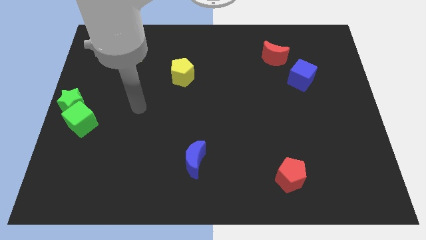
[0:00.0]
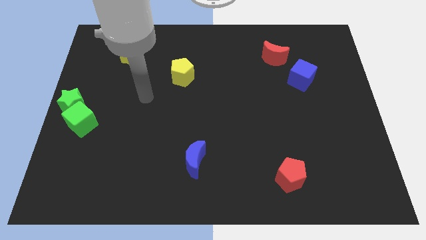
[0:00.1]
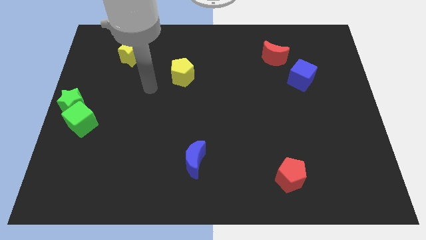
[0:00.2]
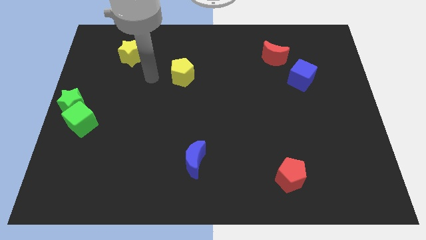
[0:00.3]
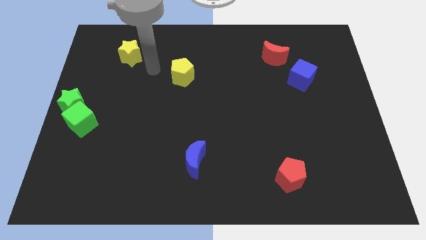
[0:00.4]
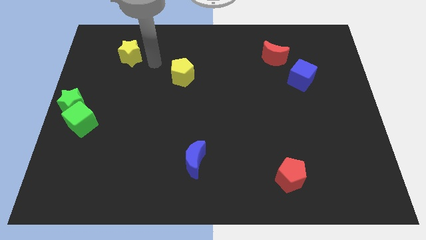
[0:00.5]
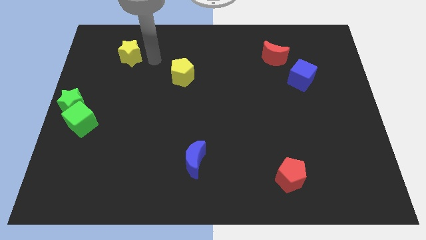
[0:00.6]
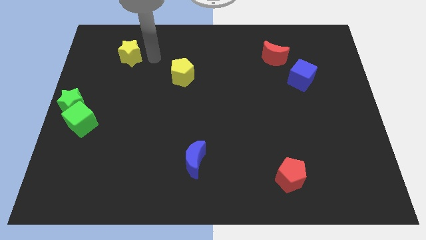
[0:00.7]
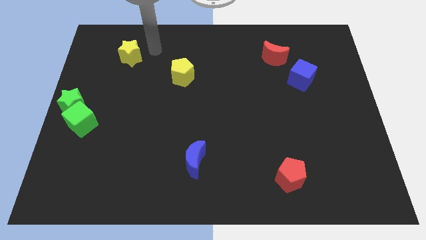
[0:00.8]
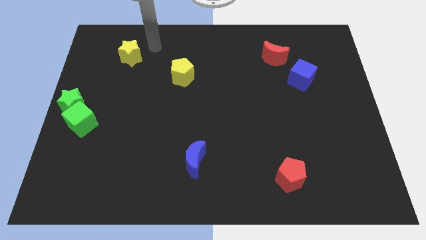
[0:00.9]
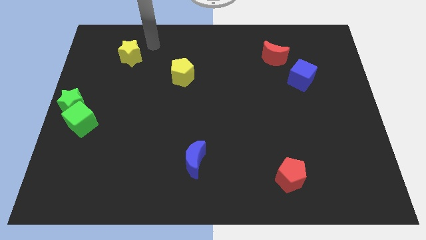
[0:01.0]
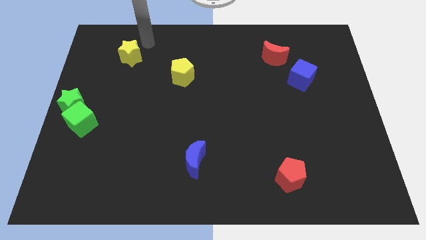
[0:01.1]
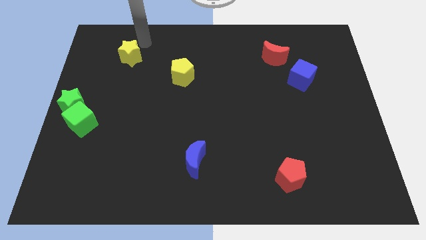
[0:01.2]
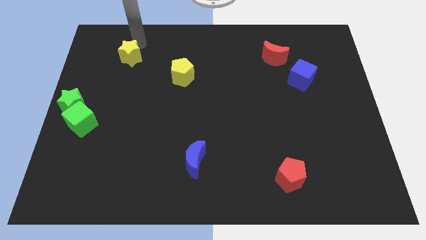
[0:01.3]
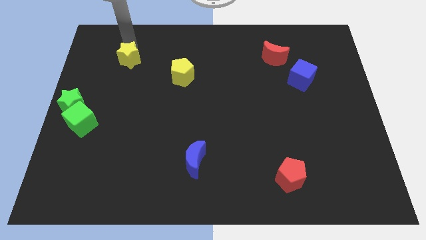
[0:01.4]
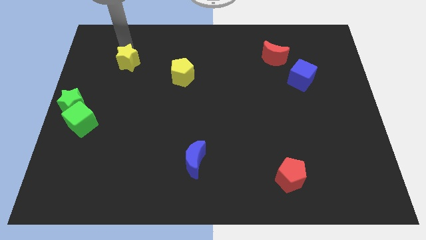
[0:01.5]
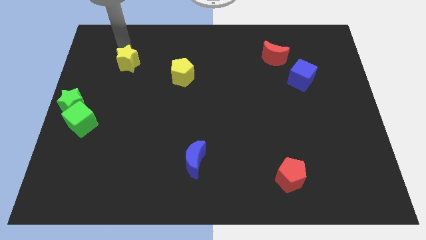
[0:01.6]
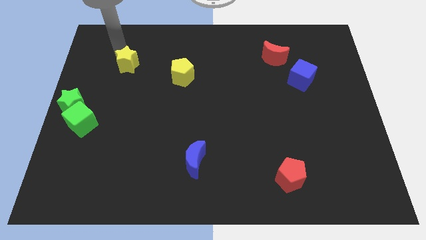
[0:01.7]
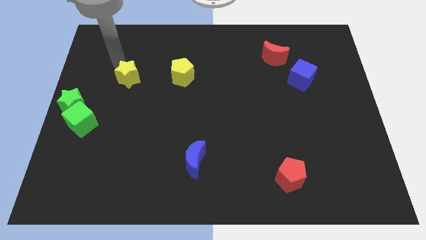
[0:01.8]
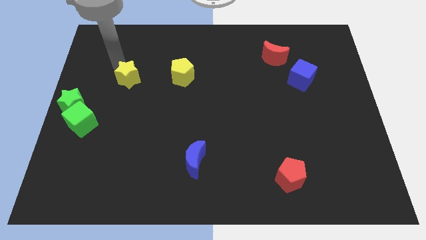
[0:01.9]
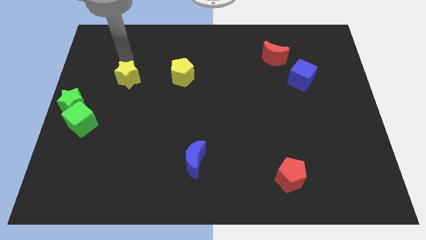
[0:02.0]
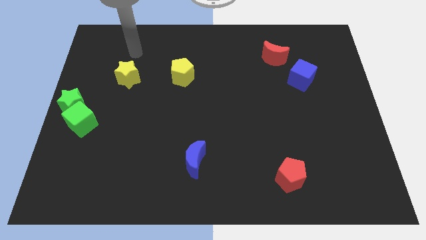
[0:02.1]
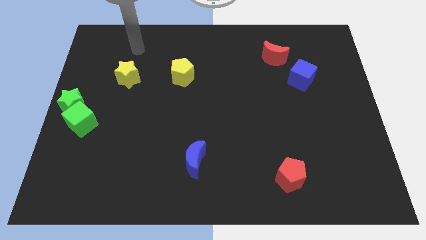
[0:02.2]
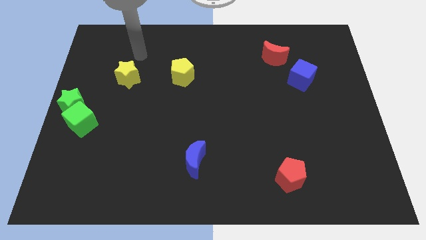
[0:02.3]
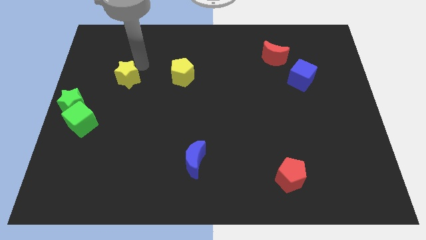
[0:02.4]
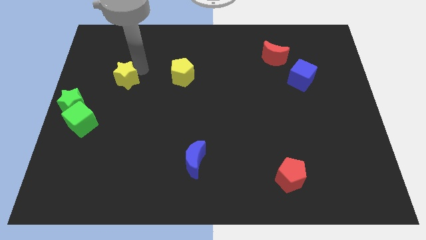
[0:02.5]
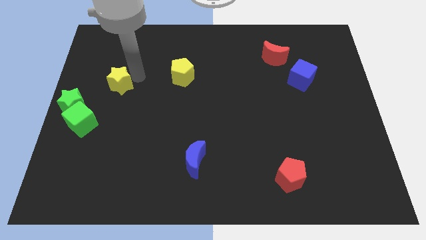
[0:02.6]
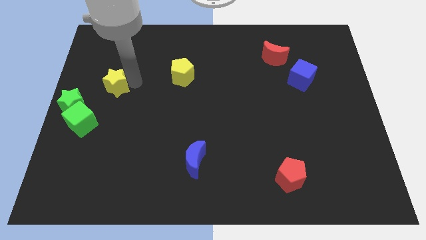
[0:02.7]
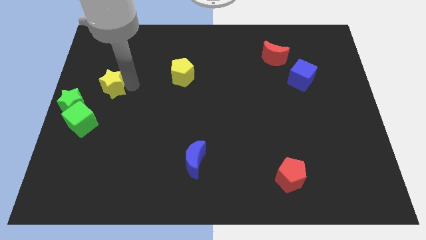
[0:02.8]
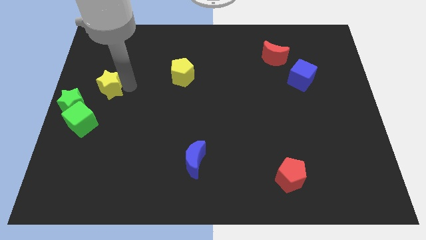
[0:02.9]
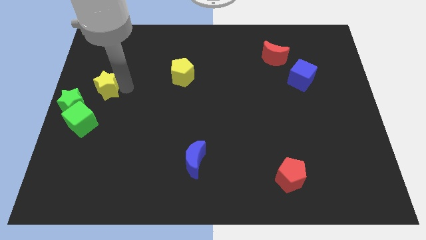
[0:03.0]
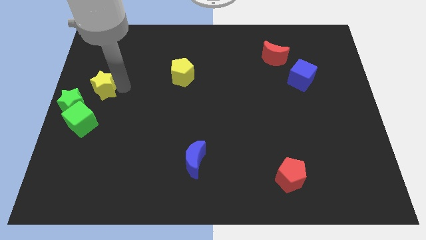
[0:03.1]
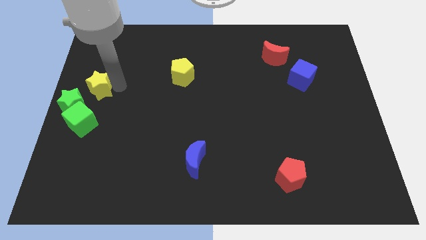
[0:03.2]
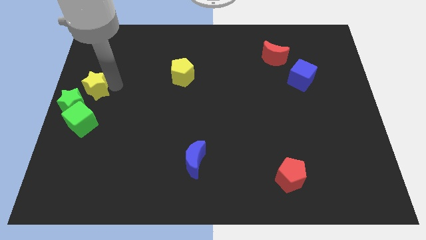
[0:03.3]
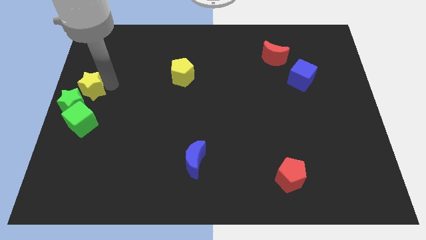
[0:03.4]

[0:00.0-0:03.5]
move the yellow star towards the green star

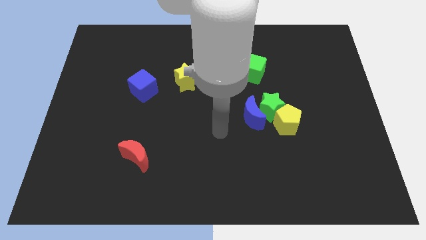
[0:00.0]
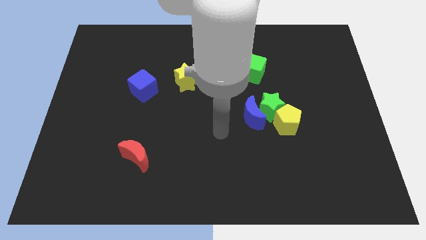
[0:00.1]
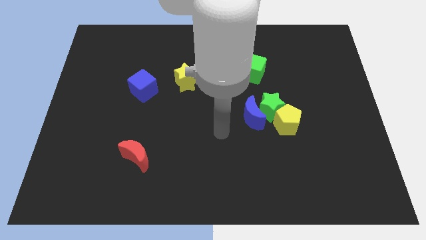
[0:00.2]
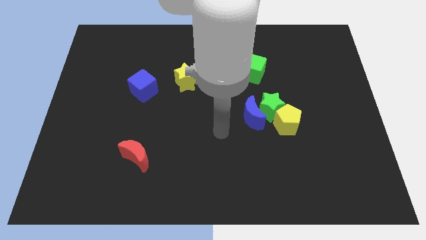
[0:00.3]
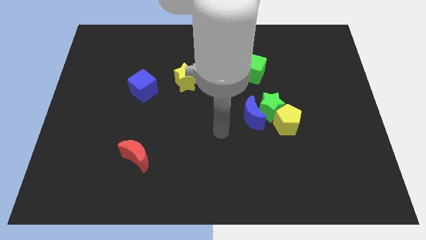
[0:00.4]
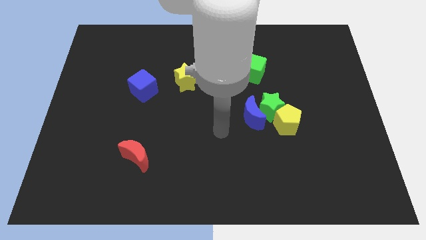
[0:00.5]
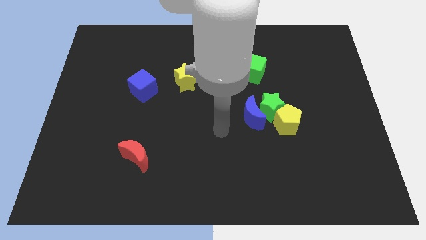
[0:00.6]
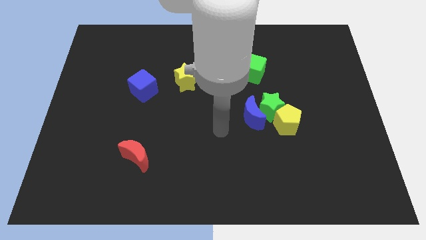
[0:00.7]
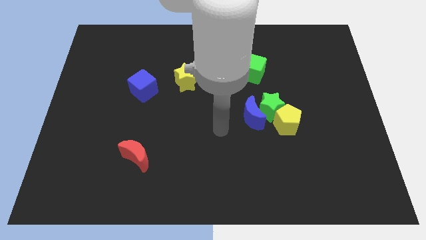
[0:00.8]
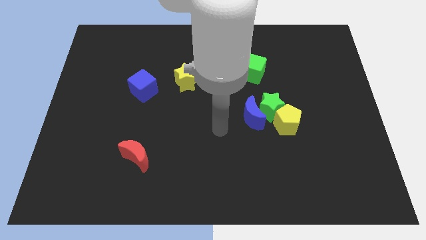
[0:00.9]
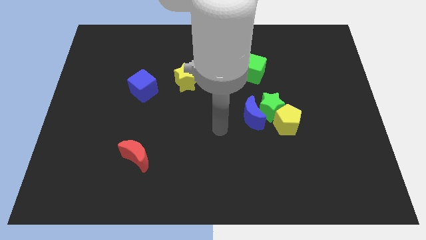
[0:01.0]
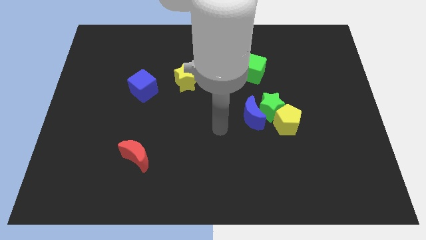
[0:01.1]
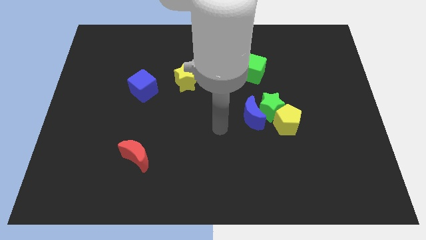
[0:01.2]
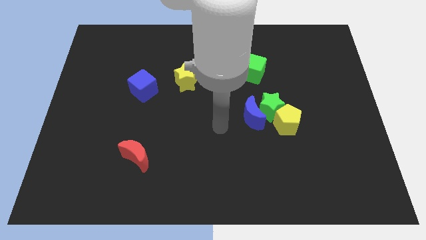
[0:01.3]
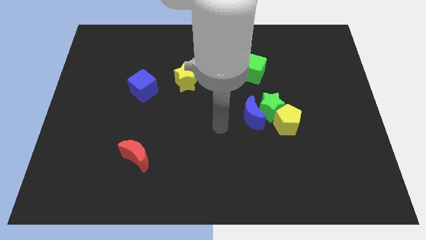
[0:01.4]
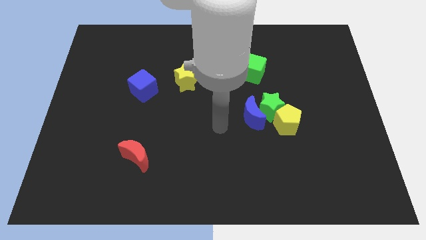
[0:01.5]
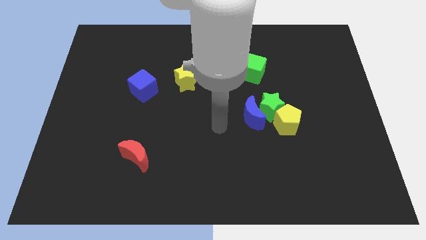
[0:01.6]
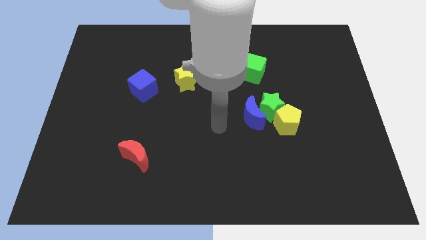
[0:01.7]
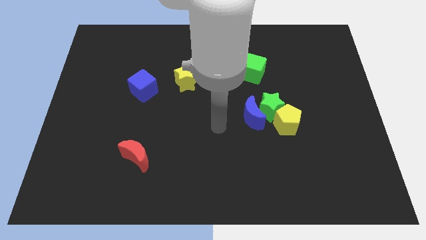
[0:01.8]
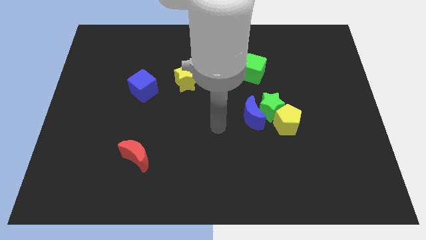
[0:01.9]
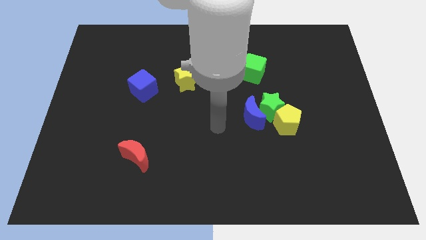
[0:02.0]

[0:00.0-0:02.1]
move your arm diagonal to the left of the blue crescent

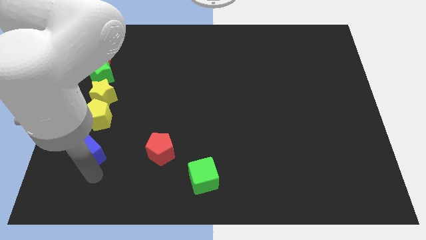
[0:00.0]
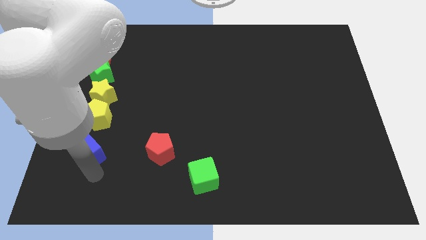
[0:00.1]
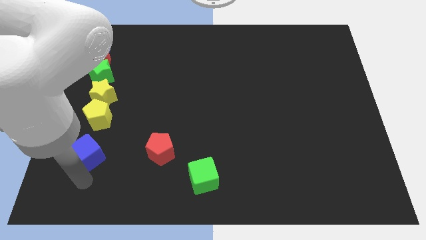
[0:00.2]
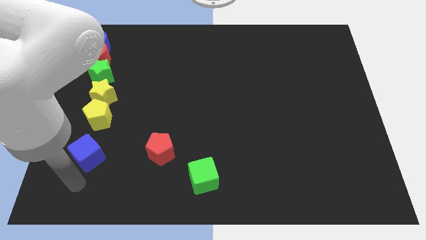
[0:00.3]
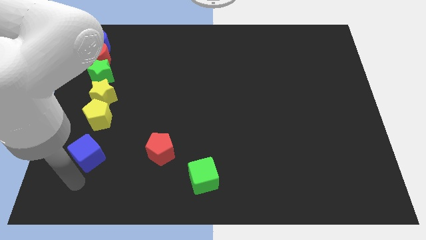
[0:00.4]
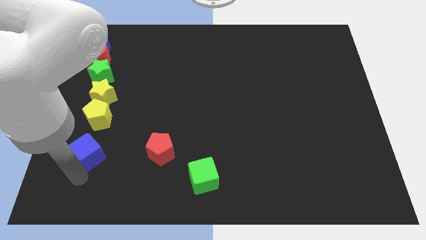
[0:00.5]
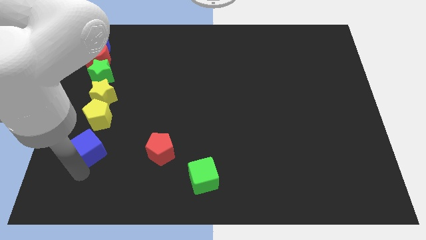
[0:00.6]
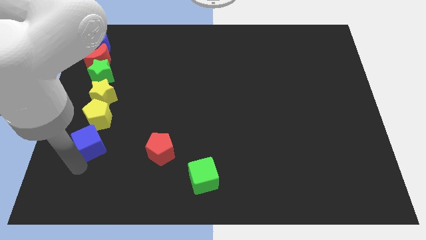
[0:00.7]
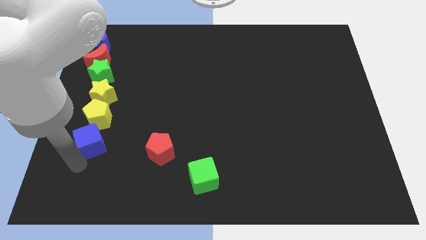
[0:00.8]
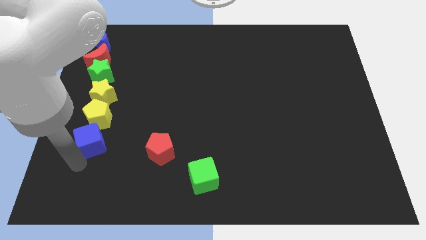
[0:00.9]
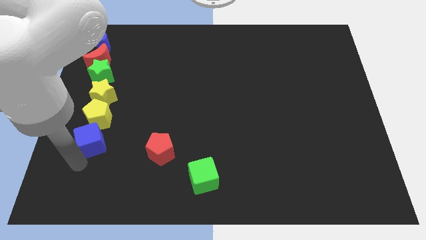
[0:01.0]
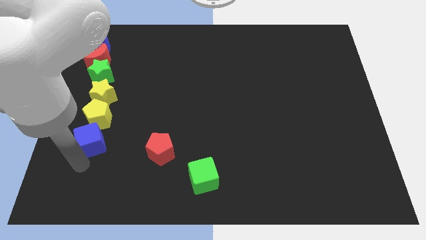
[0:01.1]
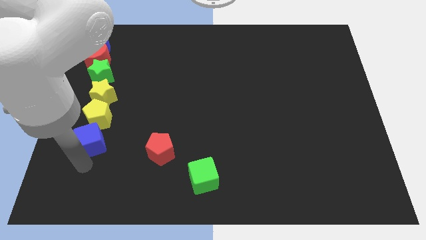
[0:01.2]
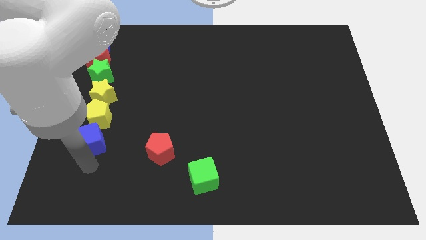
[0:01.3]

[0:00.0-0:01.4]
move the blue cube close to the bottom side of the yellow pentagon

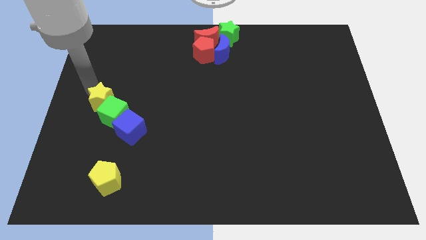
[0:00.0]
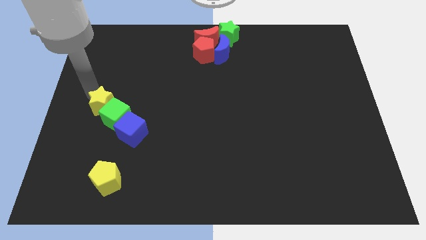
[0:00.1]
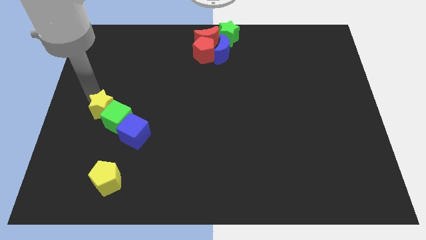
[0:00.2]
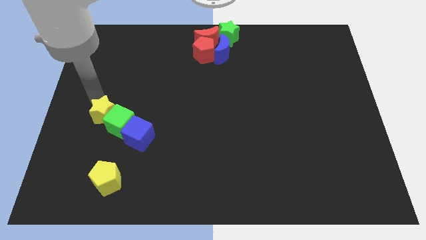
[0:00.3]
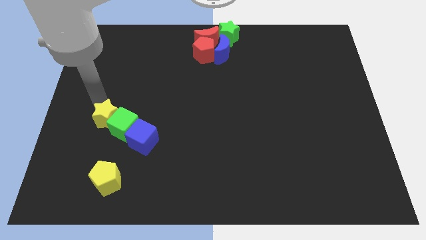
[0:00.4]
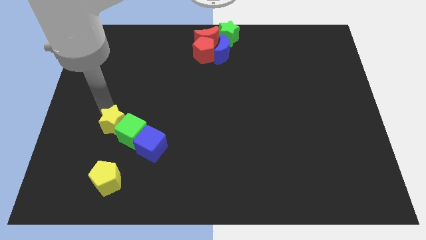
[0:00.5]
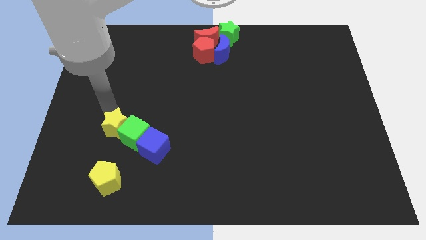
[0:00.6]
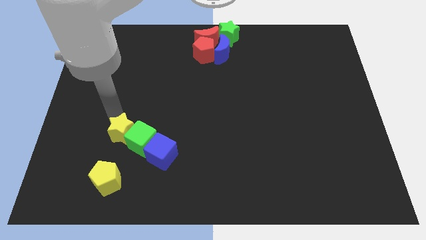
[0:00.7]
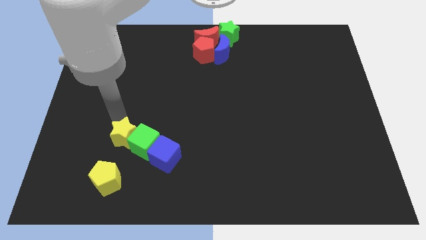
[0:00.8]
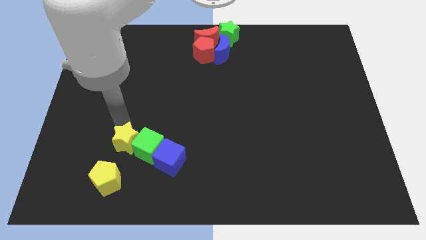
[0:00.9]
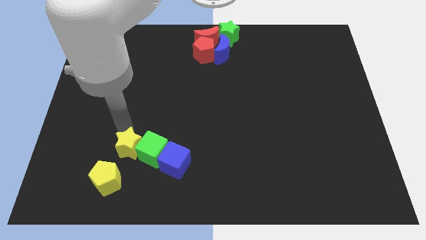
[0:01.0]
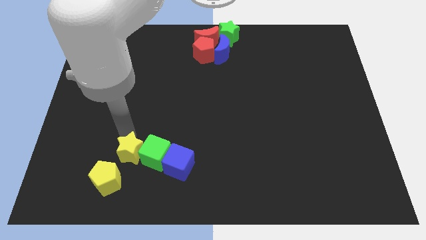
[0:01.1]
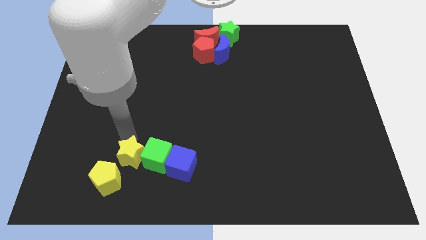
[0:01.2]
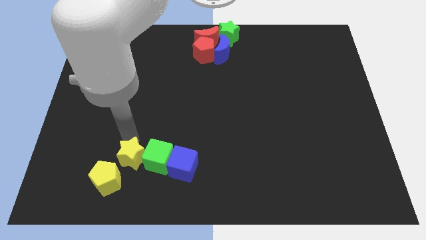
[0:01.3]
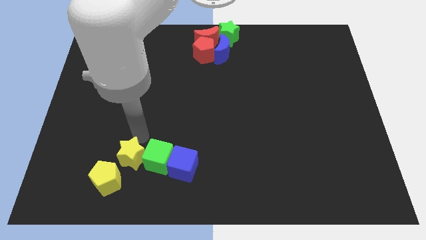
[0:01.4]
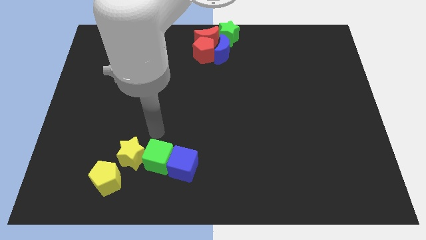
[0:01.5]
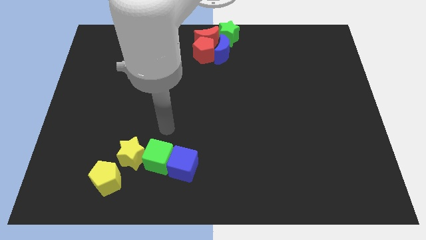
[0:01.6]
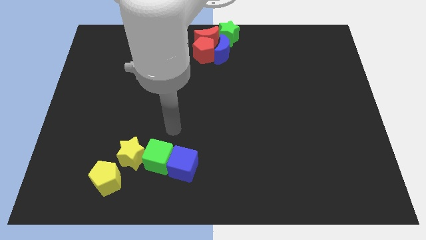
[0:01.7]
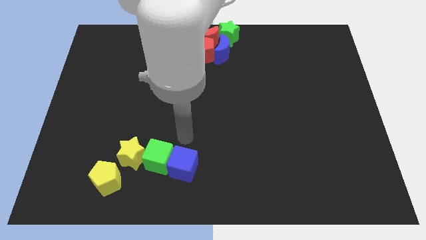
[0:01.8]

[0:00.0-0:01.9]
push blue cubegreen cube with yellow star
